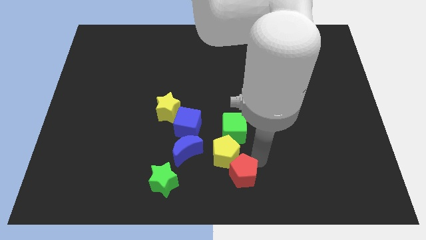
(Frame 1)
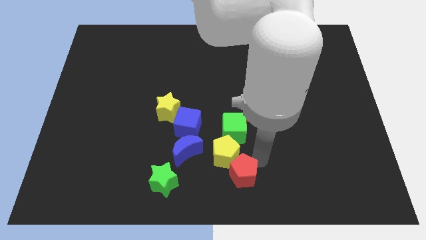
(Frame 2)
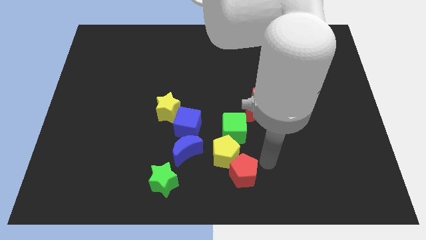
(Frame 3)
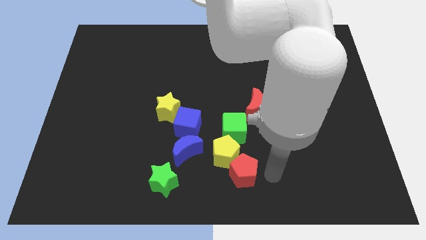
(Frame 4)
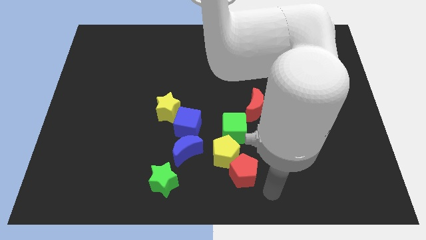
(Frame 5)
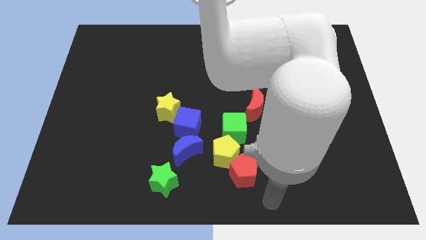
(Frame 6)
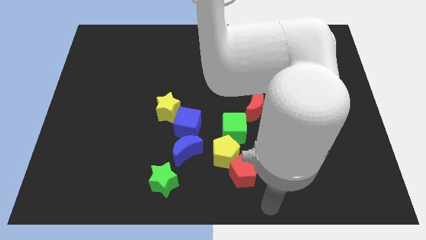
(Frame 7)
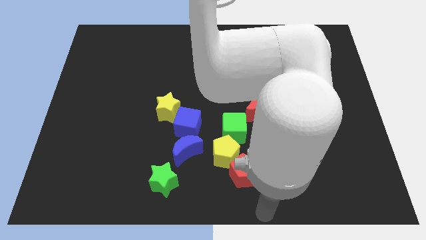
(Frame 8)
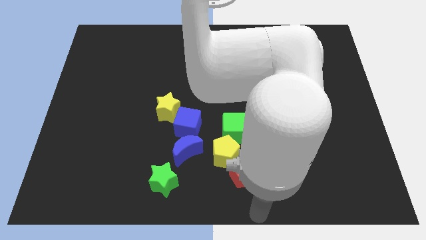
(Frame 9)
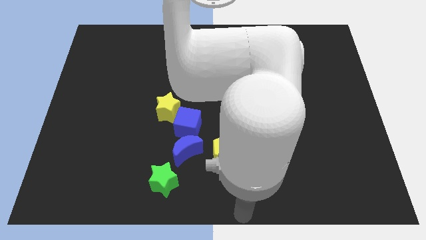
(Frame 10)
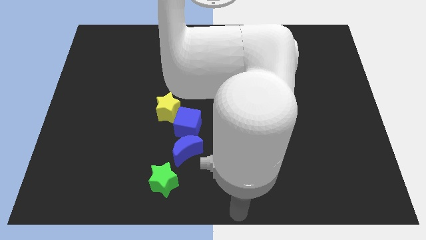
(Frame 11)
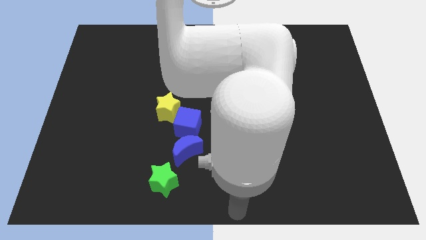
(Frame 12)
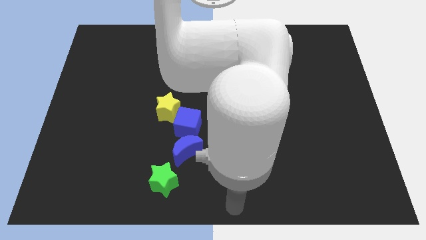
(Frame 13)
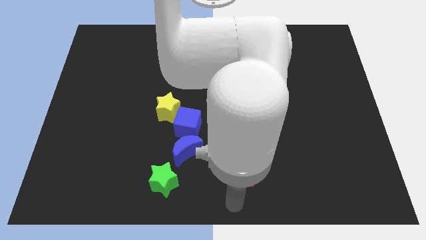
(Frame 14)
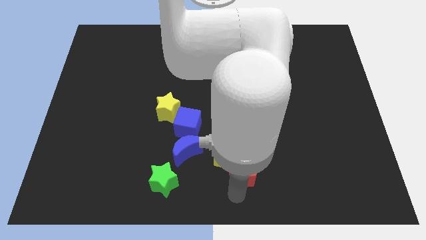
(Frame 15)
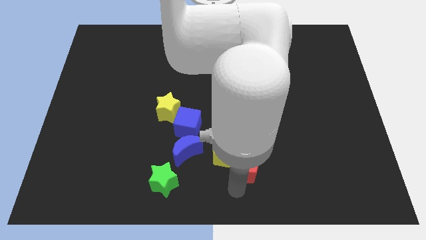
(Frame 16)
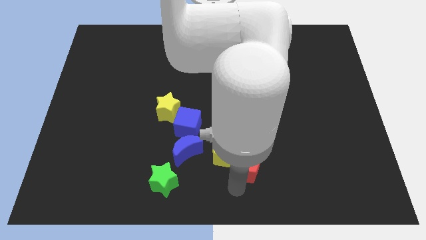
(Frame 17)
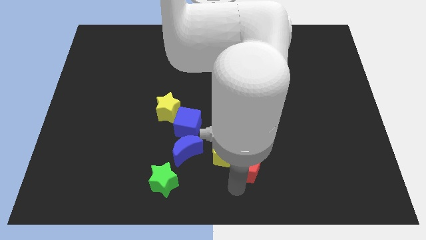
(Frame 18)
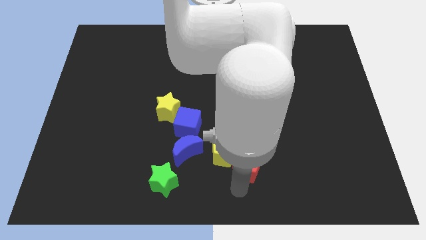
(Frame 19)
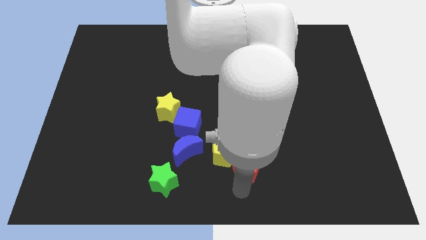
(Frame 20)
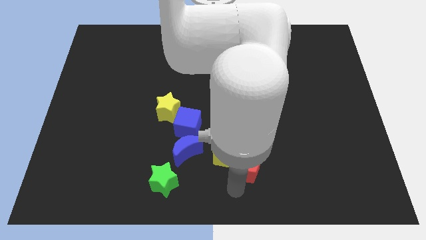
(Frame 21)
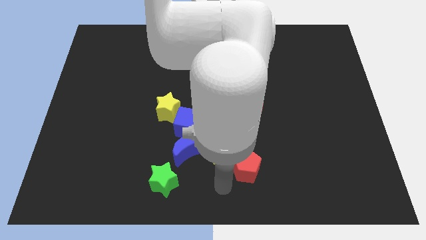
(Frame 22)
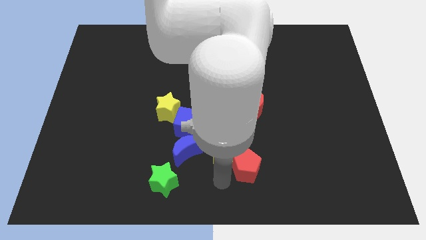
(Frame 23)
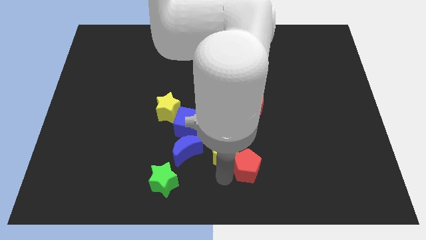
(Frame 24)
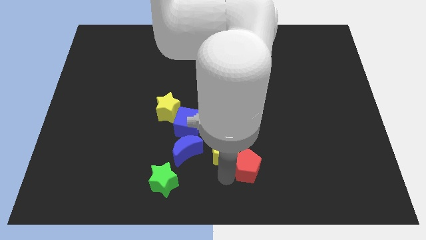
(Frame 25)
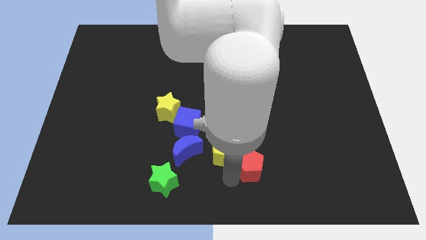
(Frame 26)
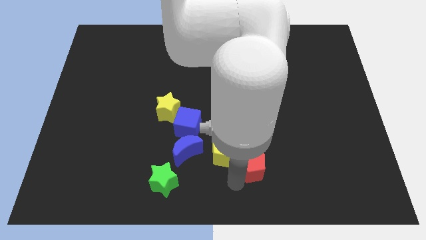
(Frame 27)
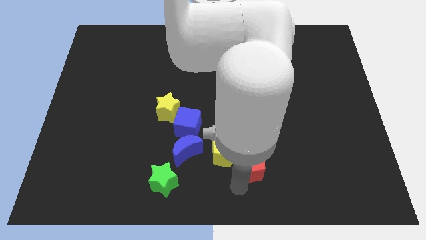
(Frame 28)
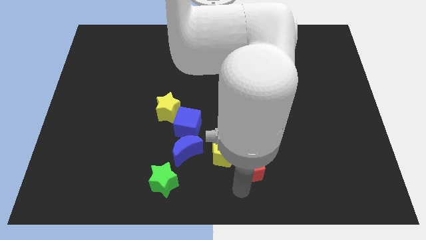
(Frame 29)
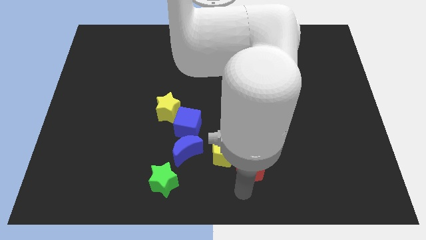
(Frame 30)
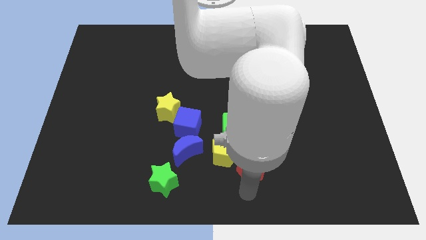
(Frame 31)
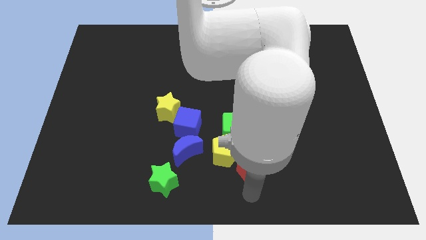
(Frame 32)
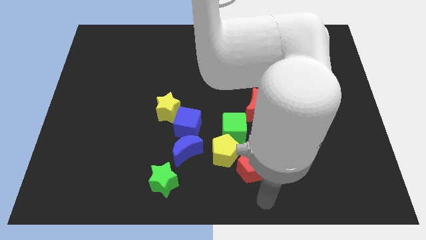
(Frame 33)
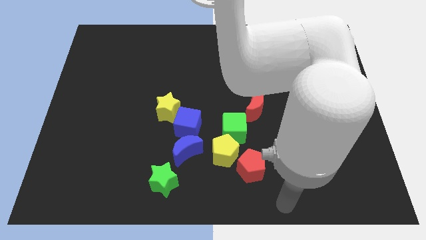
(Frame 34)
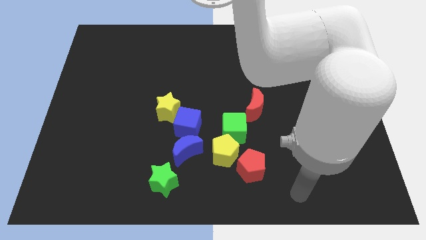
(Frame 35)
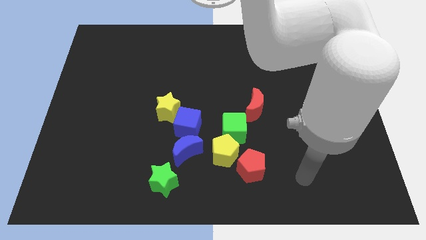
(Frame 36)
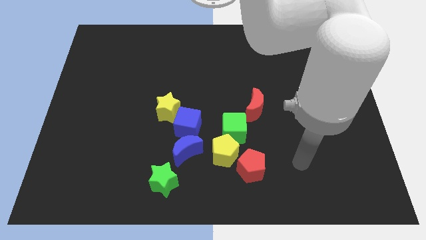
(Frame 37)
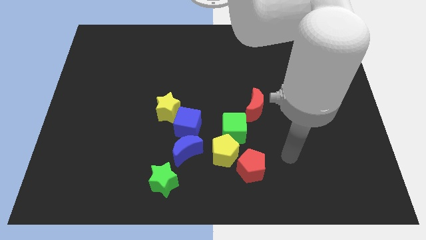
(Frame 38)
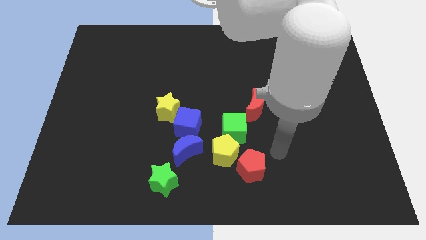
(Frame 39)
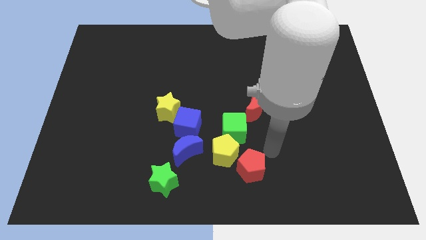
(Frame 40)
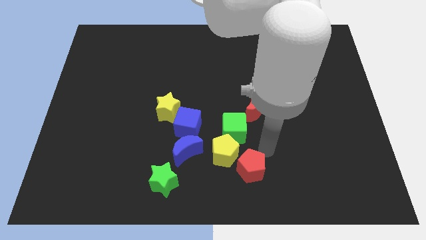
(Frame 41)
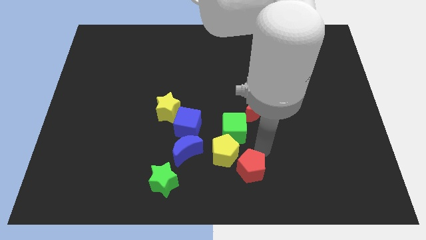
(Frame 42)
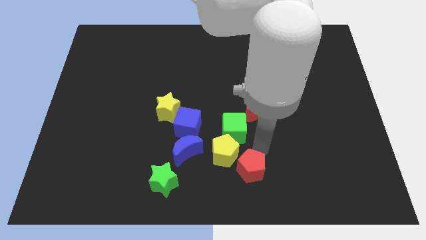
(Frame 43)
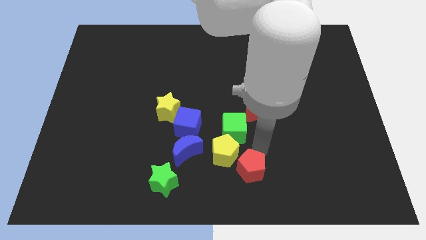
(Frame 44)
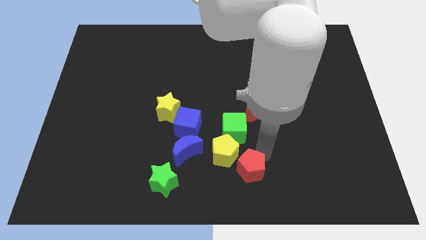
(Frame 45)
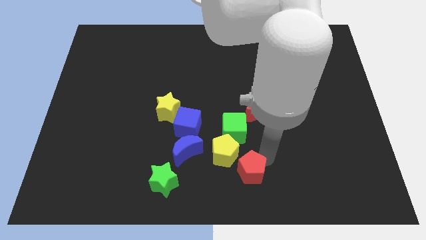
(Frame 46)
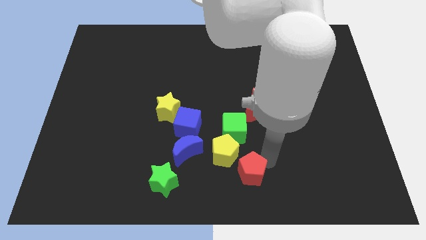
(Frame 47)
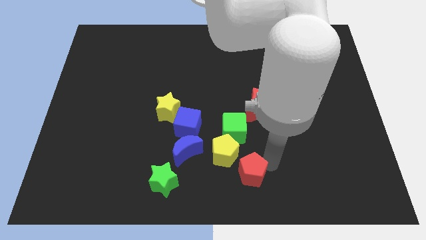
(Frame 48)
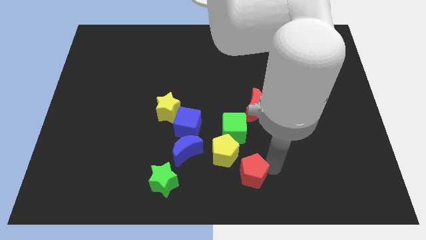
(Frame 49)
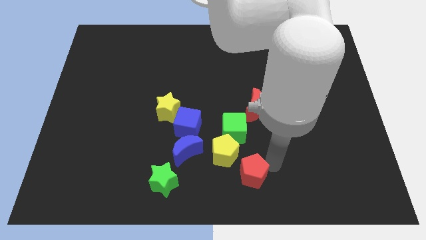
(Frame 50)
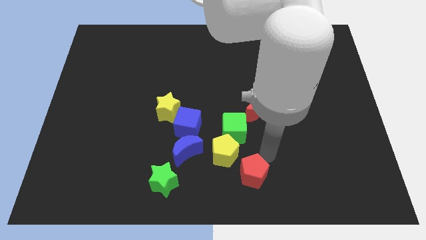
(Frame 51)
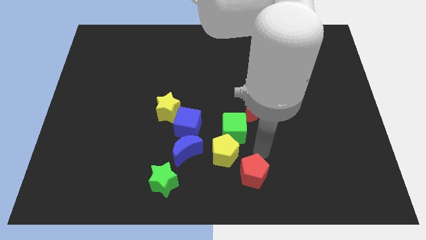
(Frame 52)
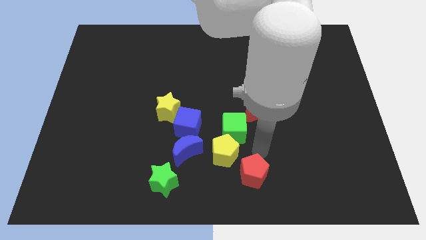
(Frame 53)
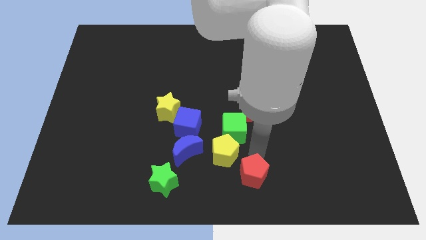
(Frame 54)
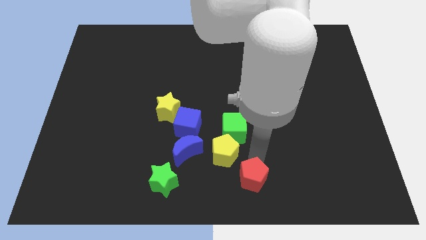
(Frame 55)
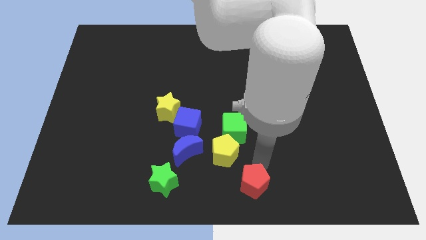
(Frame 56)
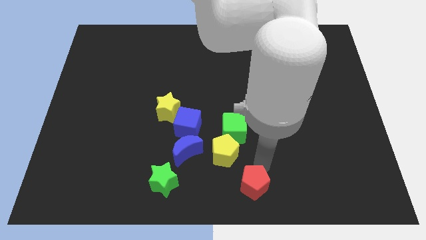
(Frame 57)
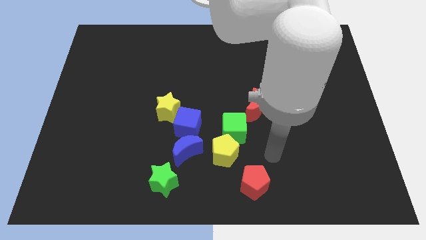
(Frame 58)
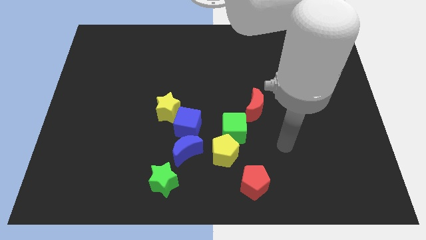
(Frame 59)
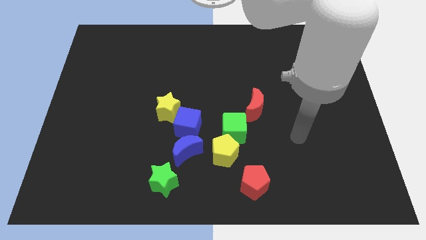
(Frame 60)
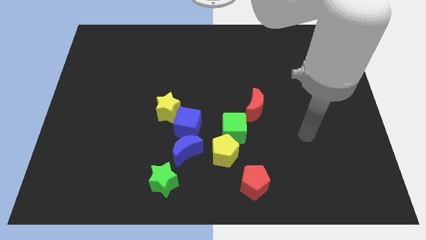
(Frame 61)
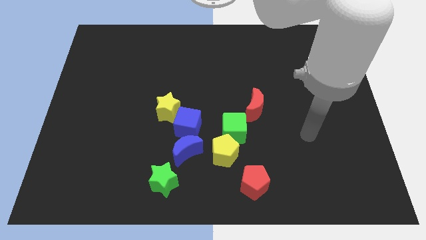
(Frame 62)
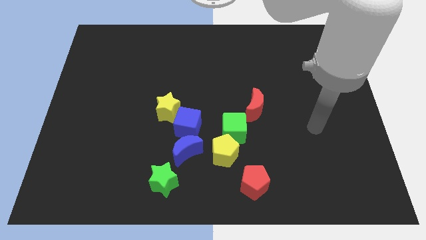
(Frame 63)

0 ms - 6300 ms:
separate the yellow pentagon and red pentagon

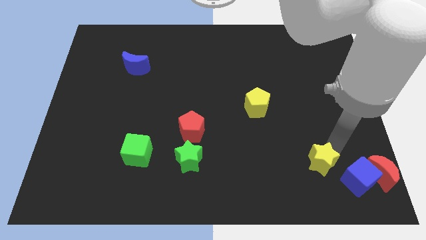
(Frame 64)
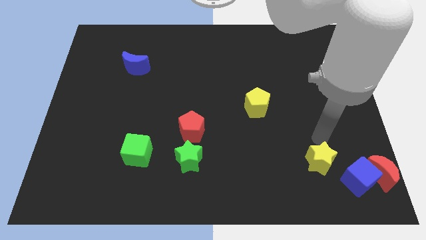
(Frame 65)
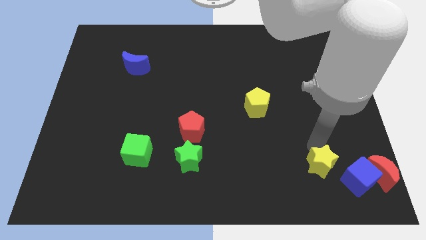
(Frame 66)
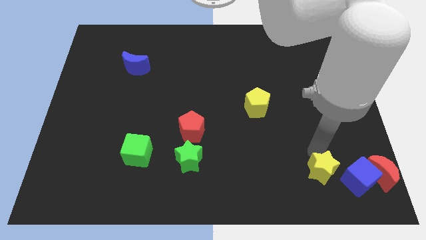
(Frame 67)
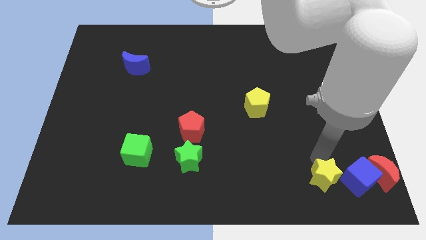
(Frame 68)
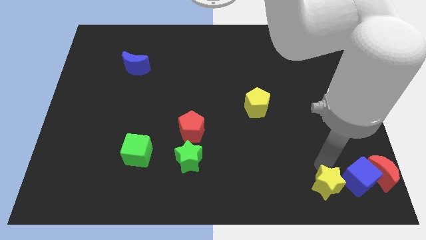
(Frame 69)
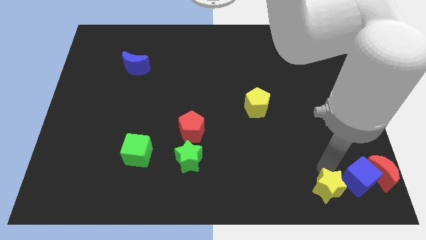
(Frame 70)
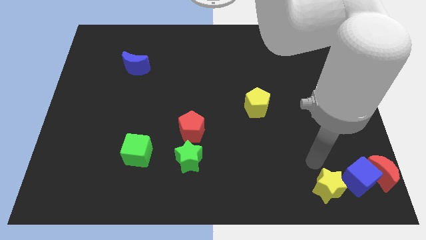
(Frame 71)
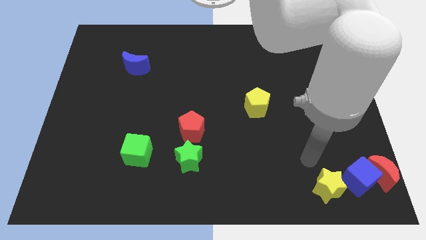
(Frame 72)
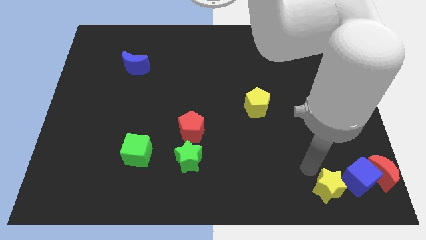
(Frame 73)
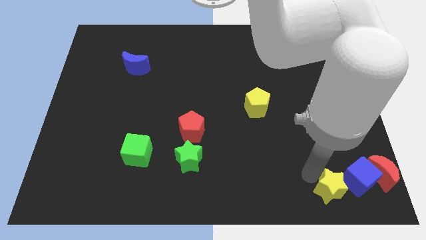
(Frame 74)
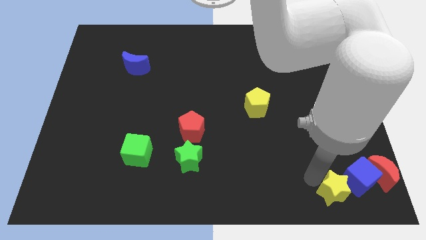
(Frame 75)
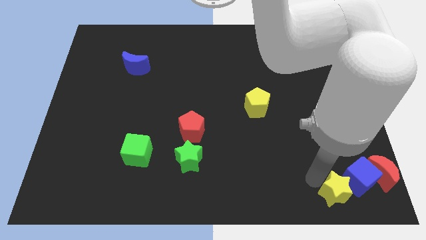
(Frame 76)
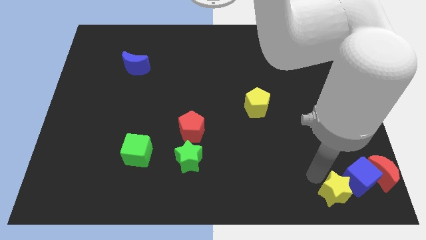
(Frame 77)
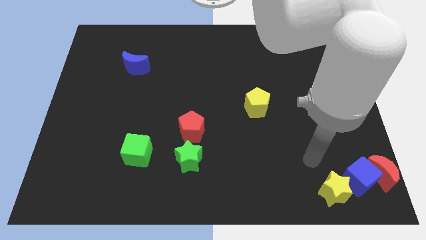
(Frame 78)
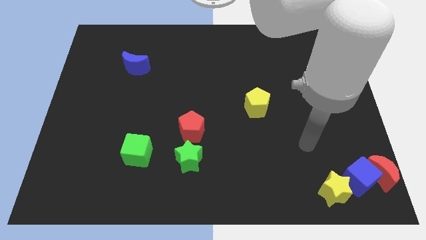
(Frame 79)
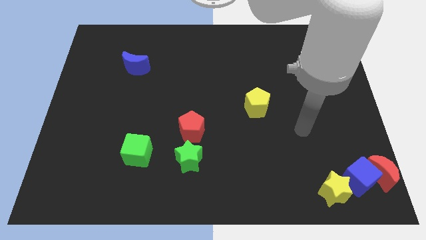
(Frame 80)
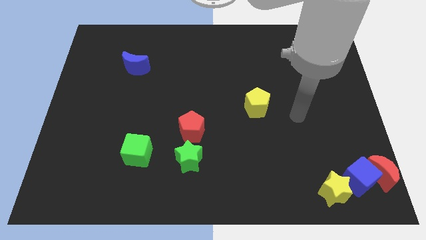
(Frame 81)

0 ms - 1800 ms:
slide the yellow star close to the blue cube

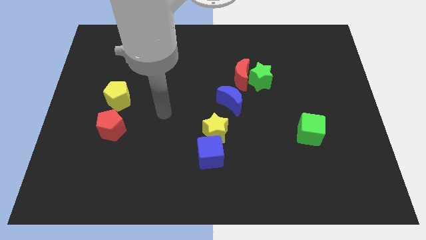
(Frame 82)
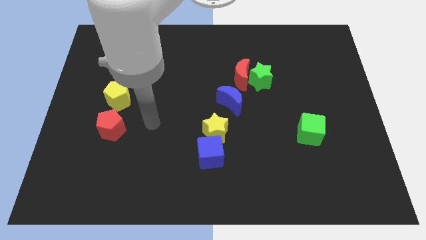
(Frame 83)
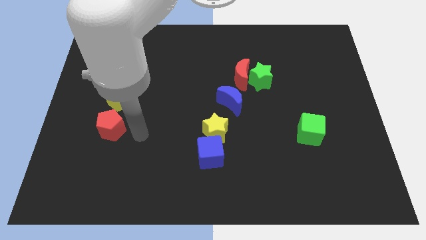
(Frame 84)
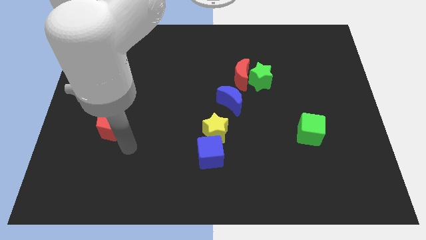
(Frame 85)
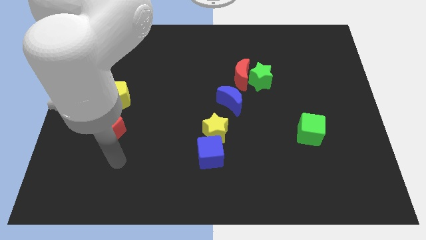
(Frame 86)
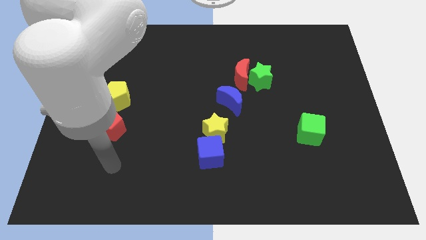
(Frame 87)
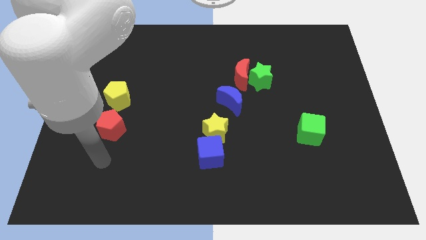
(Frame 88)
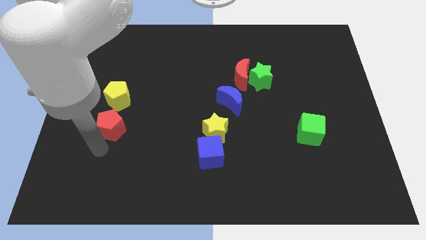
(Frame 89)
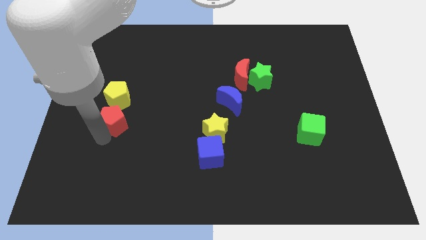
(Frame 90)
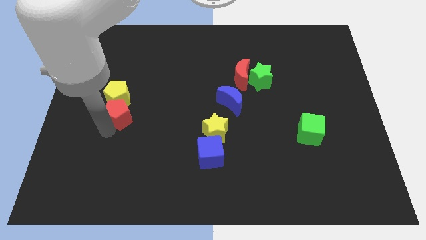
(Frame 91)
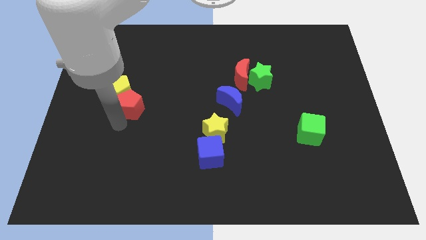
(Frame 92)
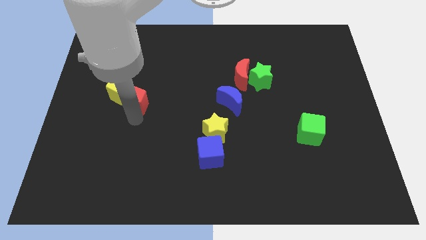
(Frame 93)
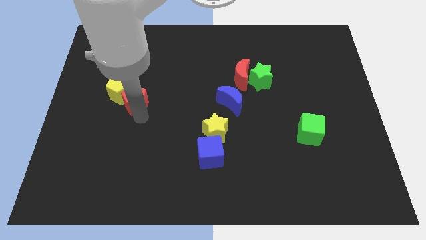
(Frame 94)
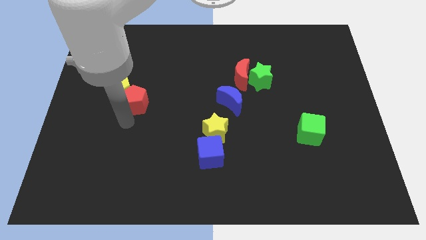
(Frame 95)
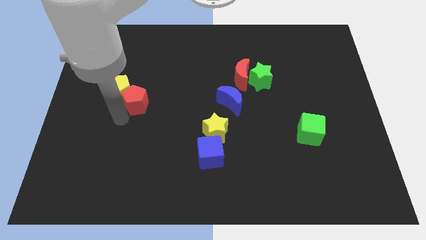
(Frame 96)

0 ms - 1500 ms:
push the red pentagon into yellow pentagon
